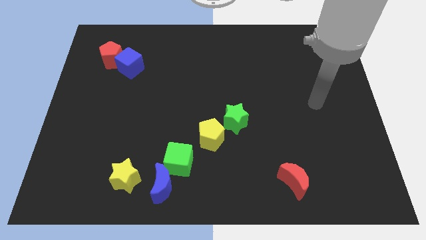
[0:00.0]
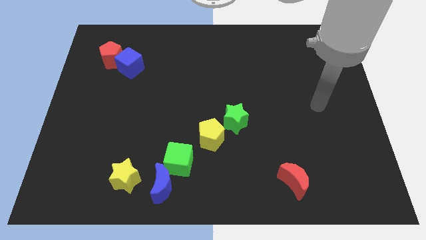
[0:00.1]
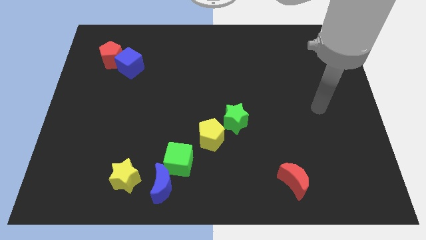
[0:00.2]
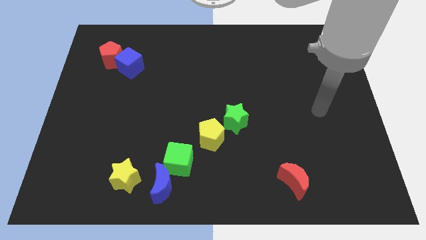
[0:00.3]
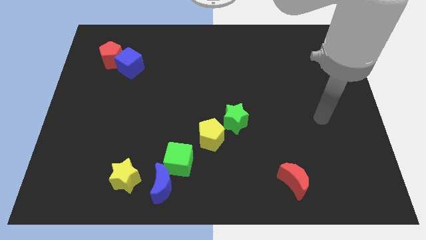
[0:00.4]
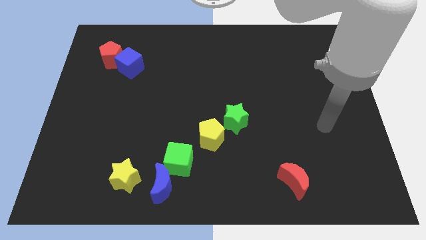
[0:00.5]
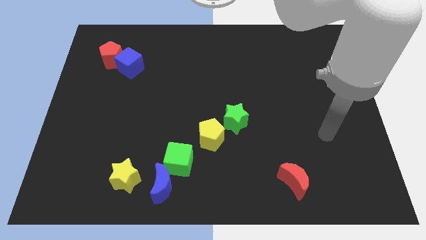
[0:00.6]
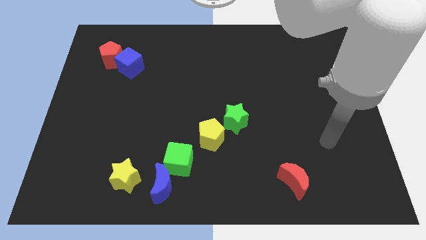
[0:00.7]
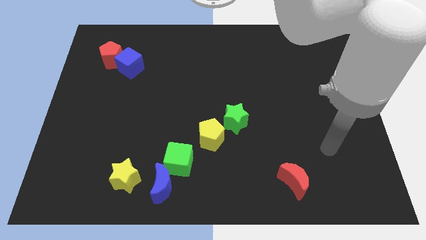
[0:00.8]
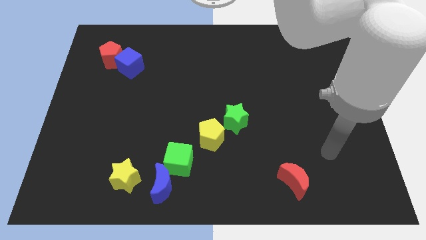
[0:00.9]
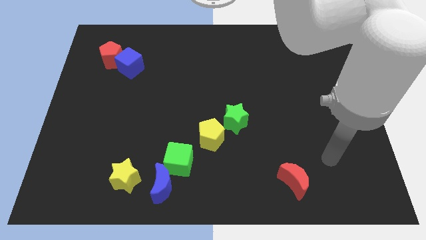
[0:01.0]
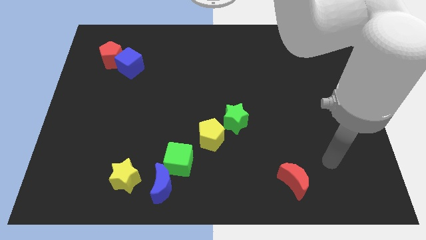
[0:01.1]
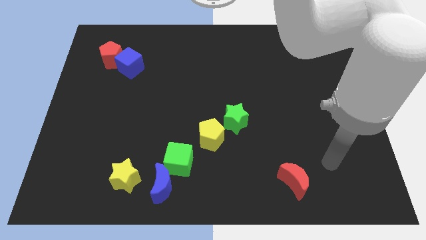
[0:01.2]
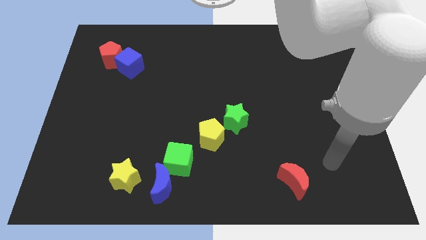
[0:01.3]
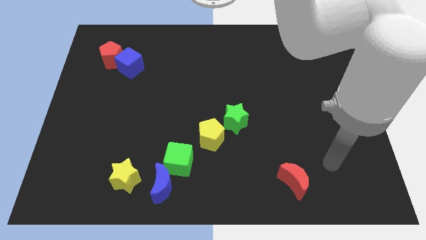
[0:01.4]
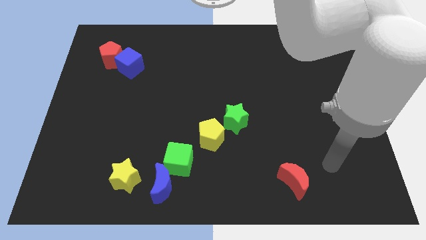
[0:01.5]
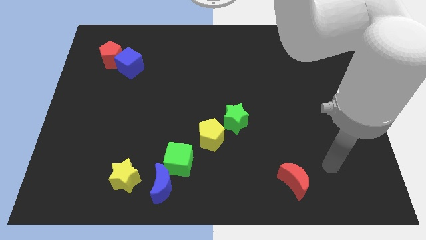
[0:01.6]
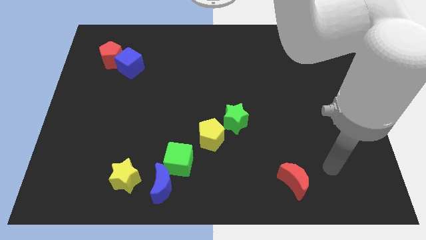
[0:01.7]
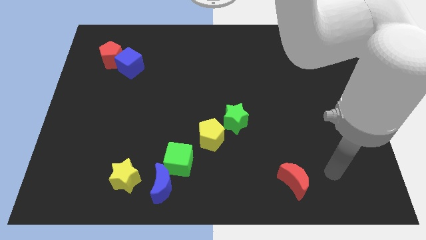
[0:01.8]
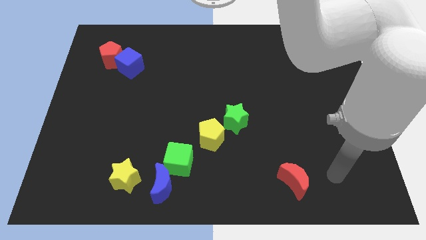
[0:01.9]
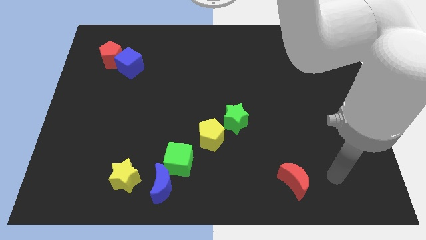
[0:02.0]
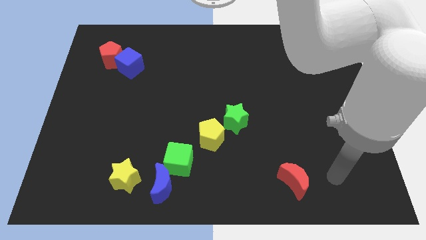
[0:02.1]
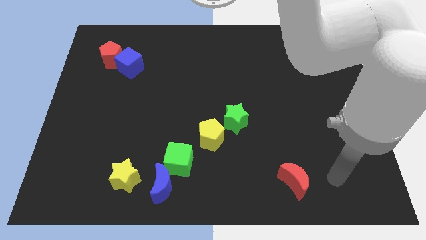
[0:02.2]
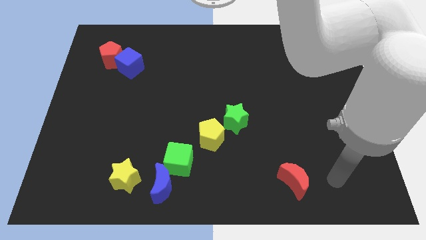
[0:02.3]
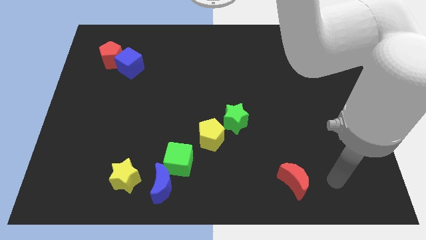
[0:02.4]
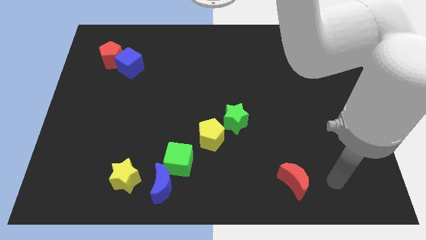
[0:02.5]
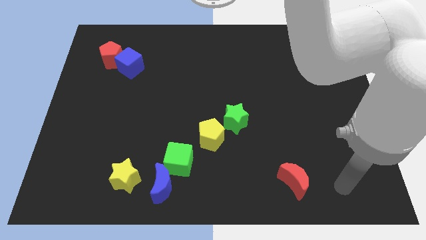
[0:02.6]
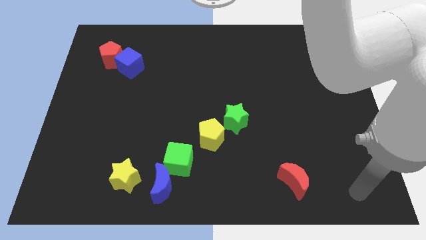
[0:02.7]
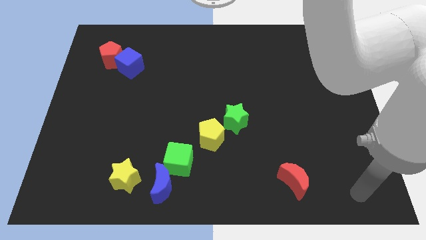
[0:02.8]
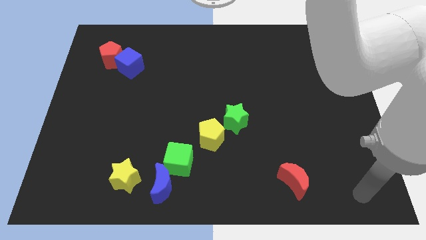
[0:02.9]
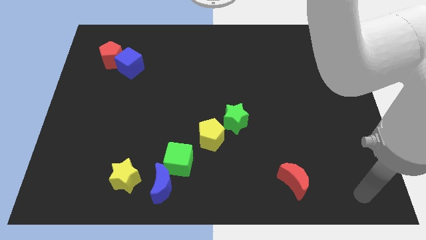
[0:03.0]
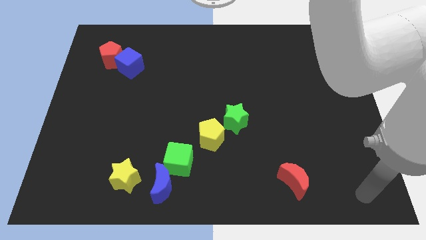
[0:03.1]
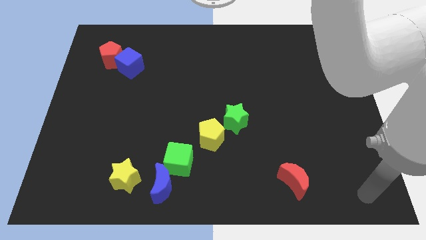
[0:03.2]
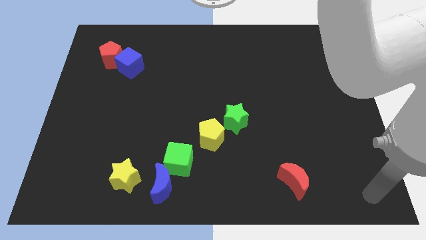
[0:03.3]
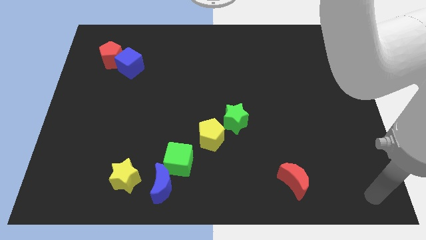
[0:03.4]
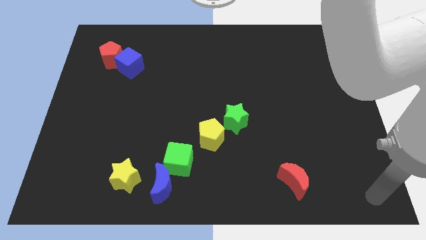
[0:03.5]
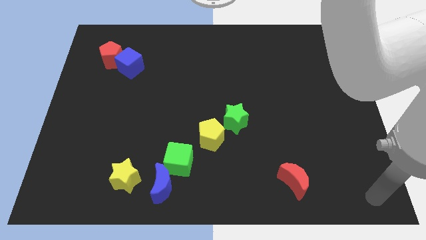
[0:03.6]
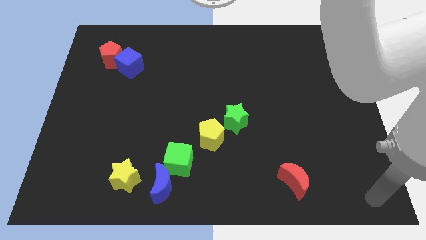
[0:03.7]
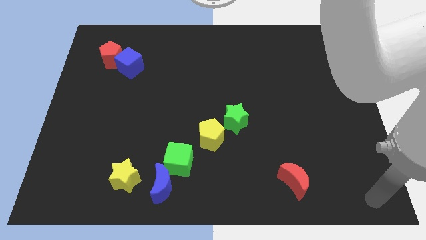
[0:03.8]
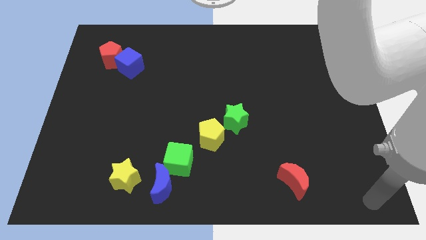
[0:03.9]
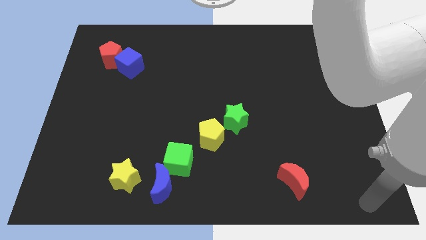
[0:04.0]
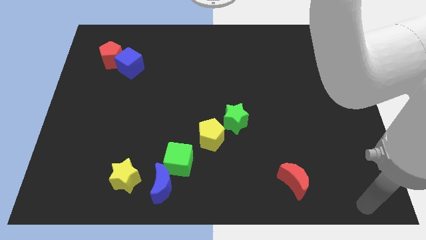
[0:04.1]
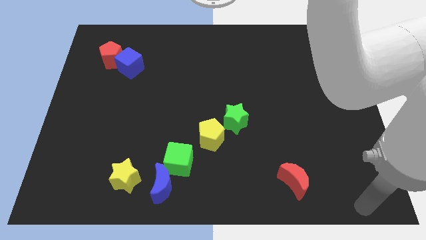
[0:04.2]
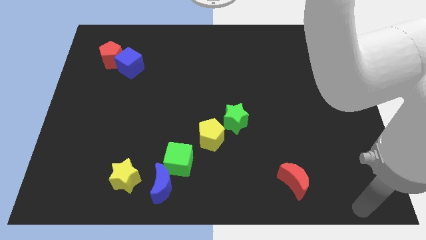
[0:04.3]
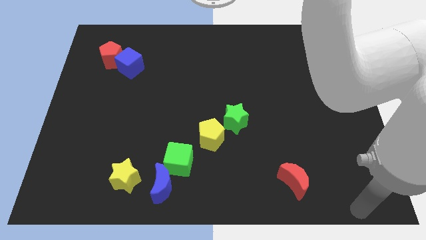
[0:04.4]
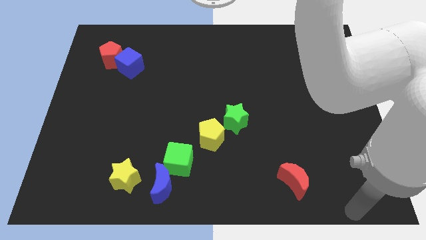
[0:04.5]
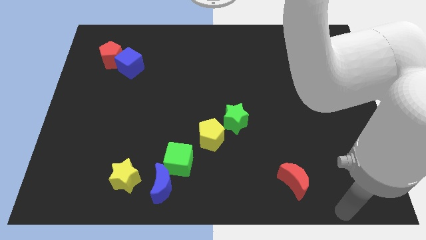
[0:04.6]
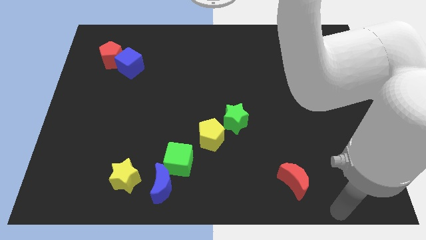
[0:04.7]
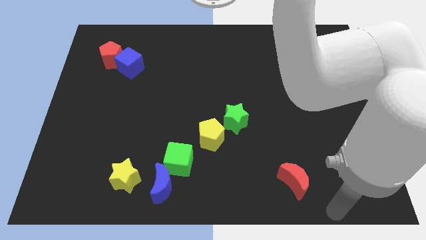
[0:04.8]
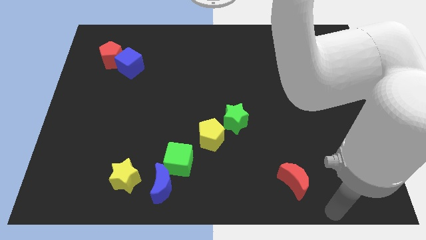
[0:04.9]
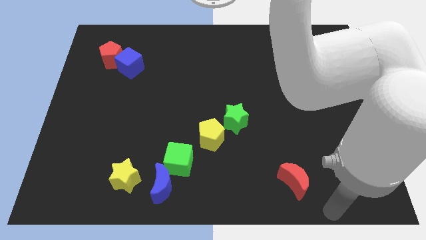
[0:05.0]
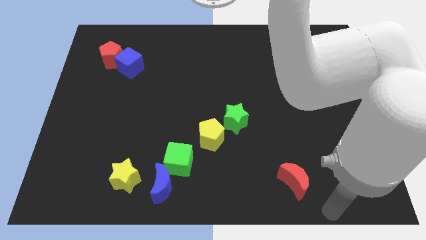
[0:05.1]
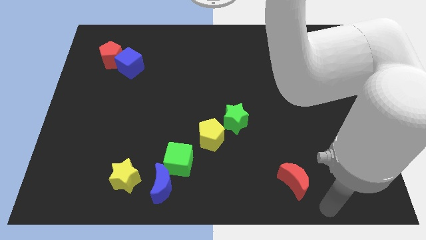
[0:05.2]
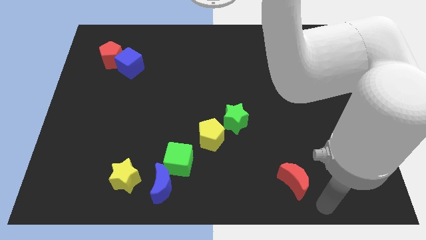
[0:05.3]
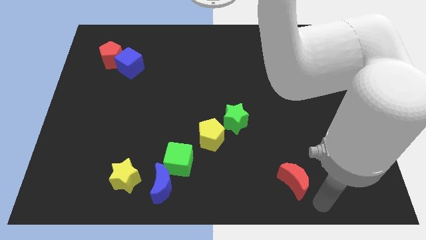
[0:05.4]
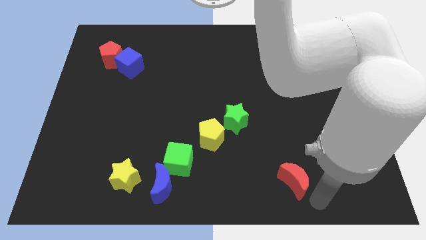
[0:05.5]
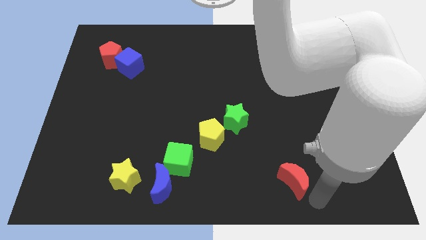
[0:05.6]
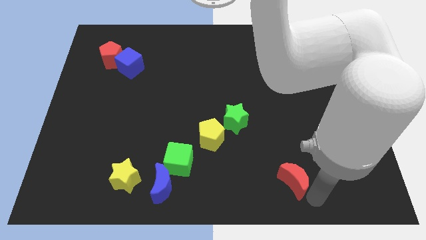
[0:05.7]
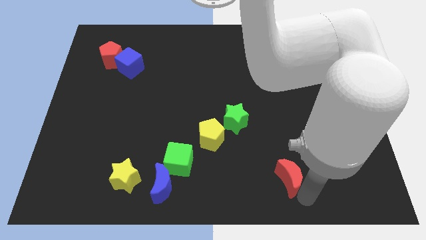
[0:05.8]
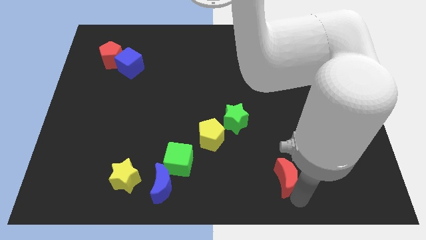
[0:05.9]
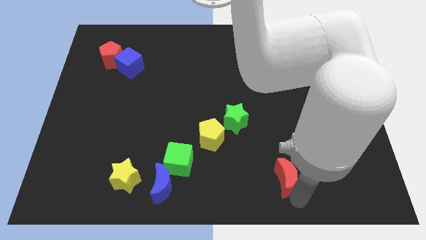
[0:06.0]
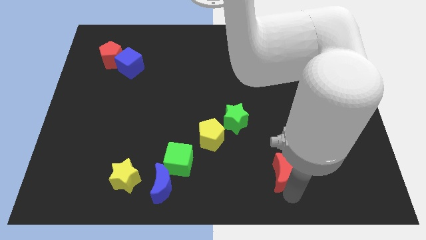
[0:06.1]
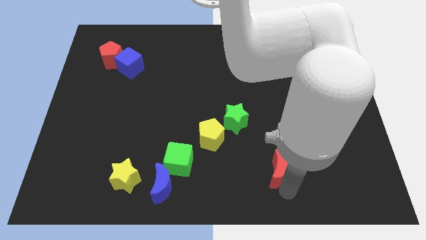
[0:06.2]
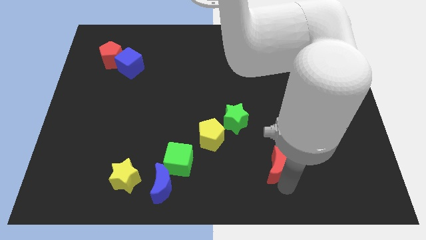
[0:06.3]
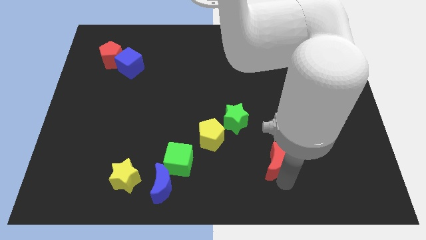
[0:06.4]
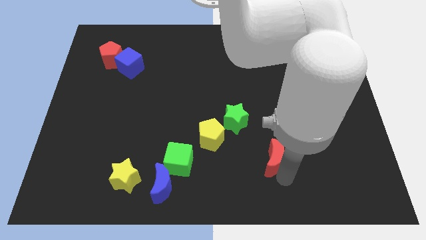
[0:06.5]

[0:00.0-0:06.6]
push the red crescent slightly towards the top

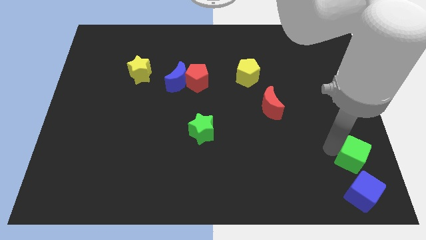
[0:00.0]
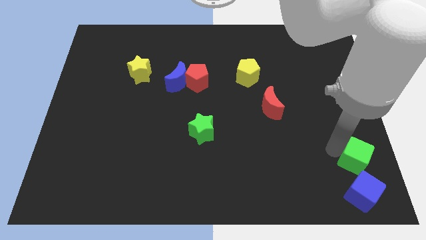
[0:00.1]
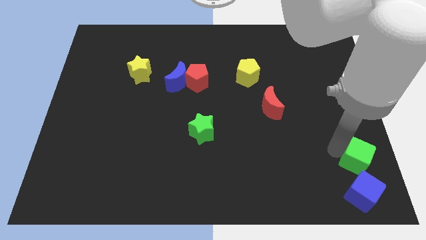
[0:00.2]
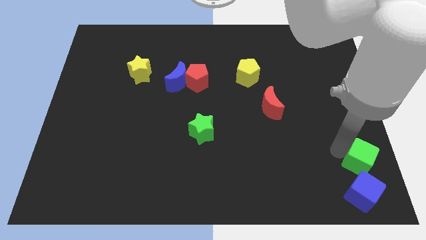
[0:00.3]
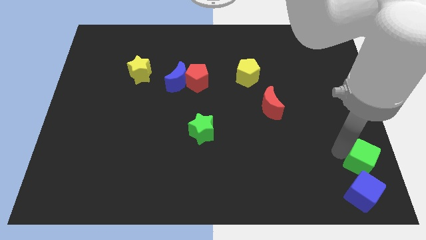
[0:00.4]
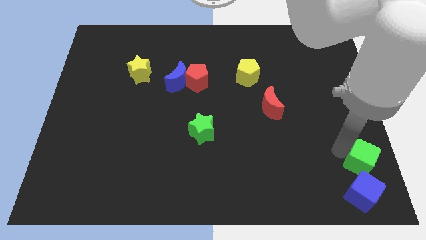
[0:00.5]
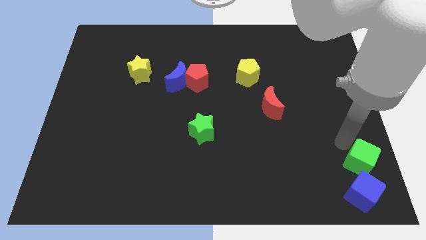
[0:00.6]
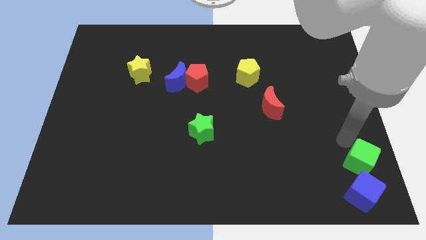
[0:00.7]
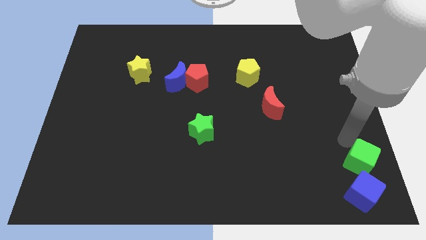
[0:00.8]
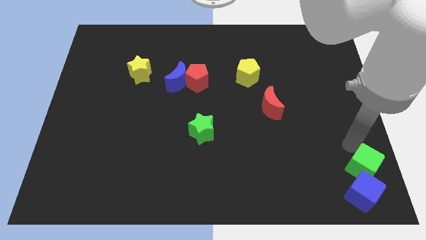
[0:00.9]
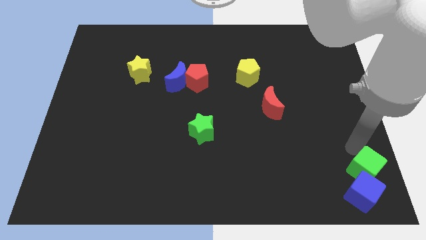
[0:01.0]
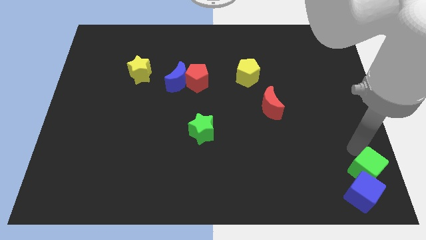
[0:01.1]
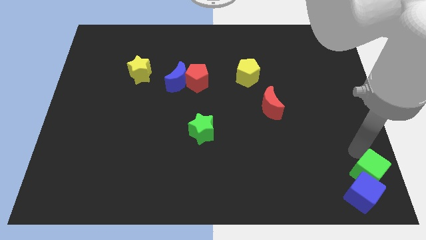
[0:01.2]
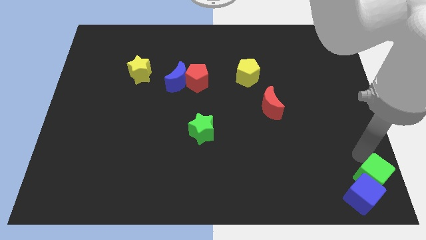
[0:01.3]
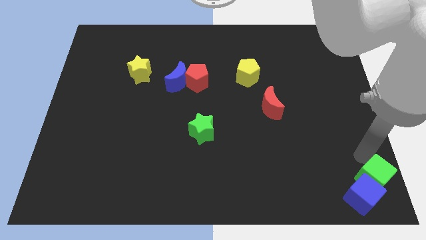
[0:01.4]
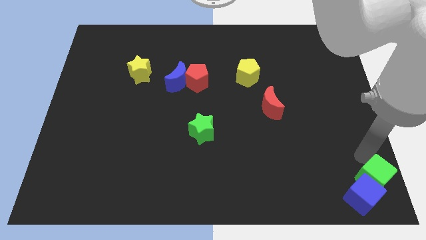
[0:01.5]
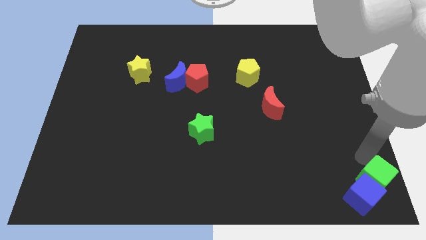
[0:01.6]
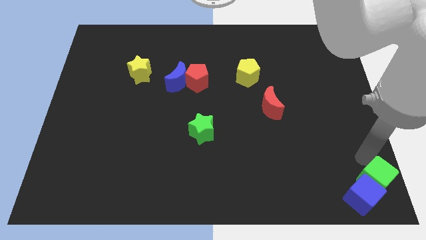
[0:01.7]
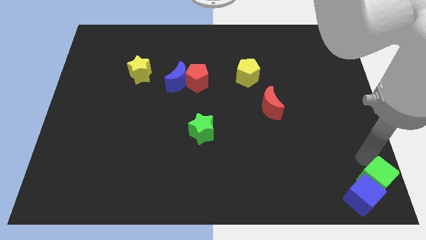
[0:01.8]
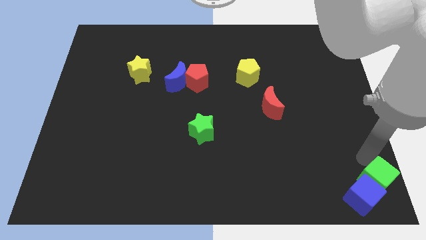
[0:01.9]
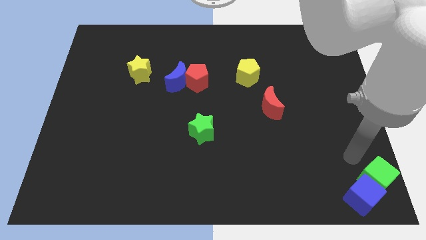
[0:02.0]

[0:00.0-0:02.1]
push the green cube to the right of the blue cube

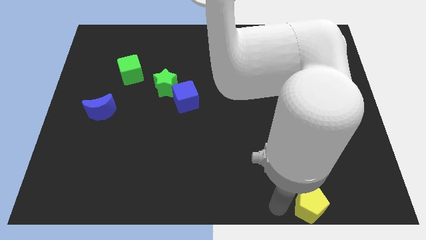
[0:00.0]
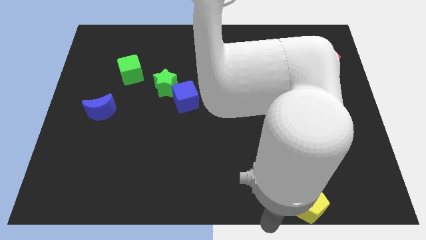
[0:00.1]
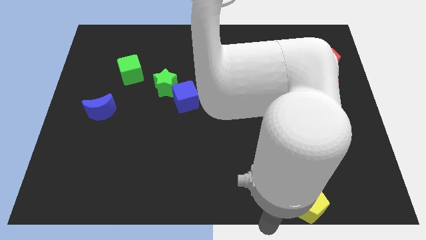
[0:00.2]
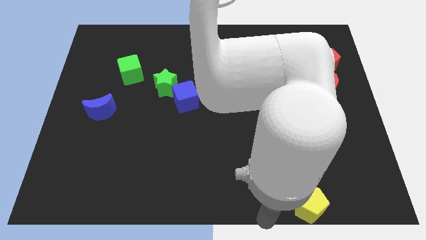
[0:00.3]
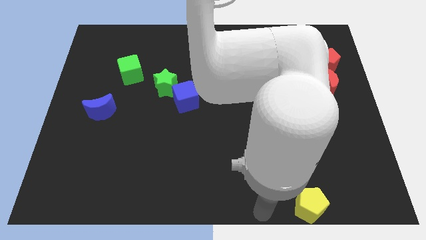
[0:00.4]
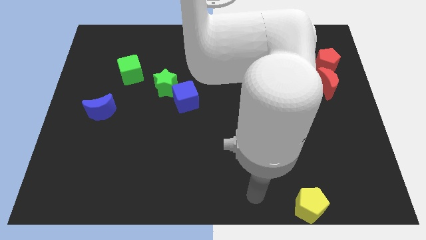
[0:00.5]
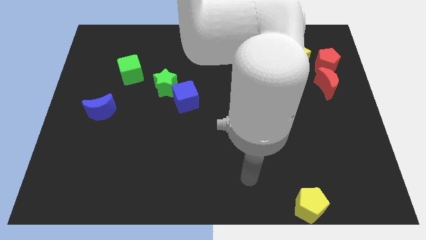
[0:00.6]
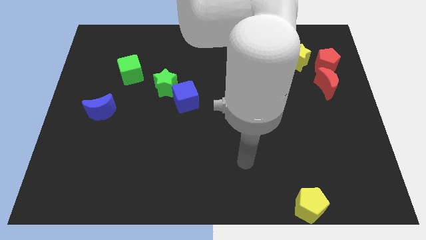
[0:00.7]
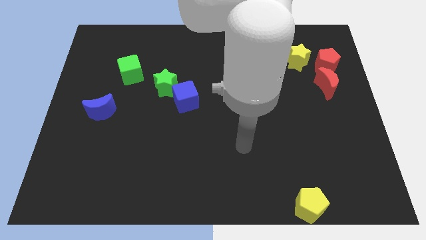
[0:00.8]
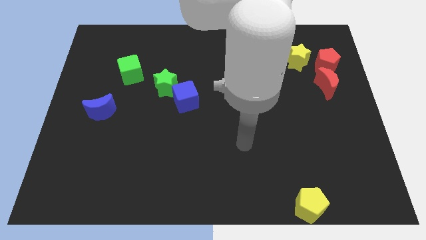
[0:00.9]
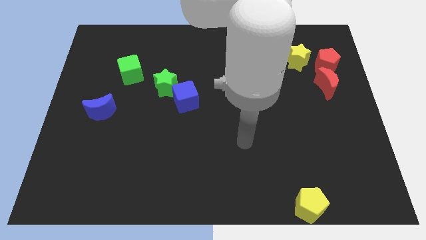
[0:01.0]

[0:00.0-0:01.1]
place your arm in between the yellow pentagon and blue cube
